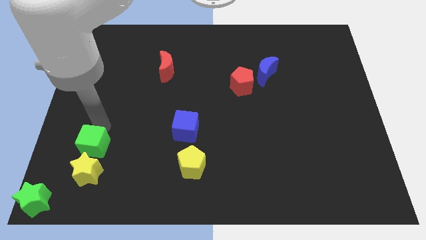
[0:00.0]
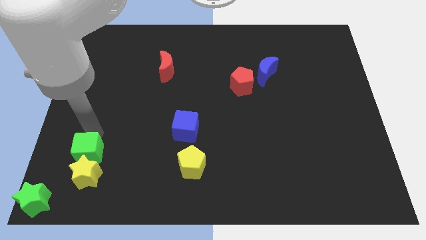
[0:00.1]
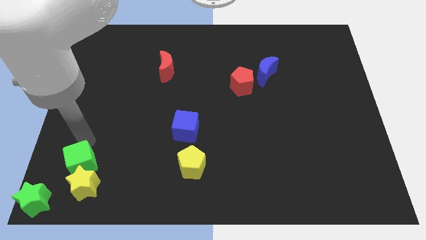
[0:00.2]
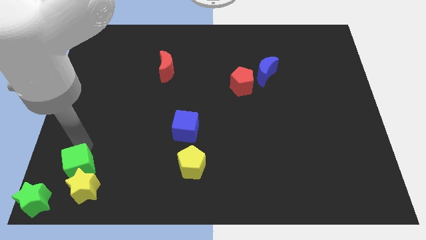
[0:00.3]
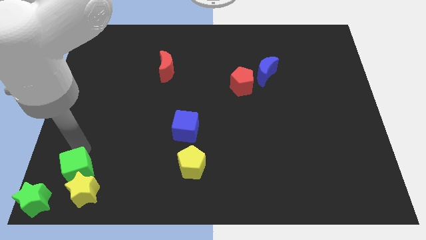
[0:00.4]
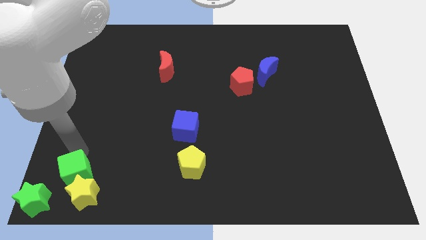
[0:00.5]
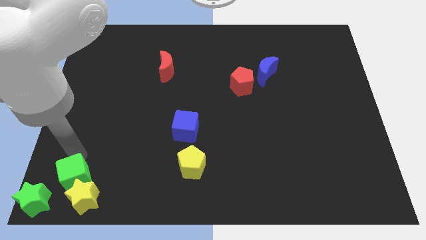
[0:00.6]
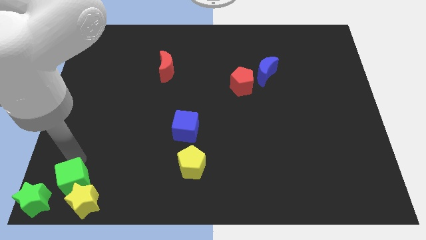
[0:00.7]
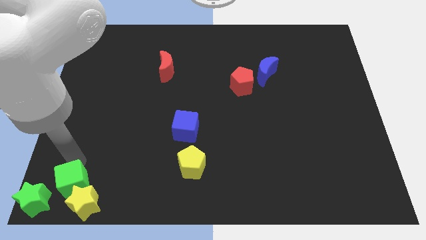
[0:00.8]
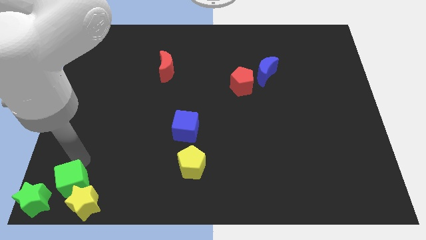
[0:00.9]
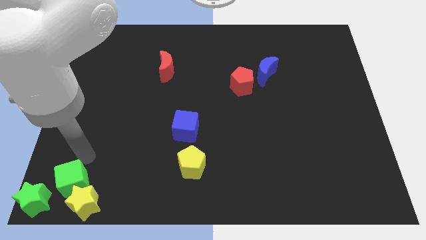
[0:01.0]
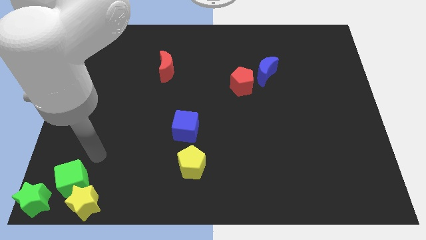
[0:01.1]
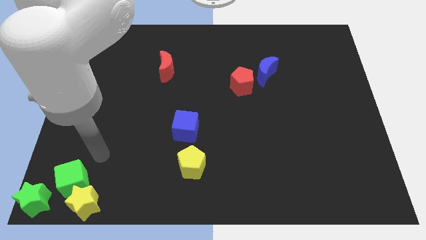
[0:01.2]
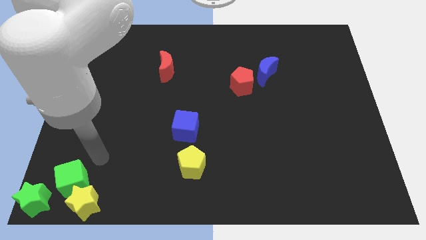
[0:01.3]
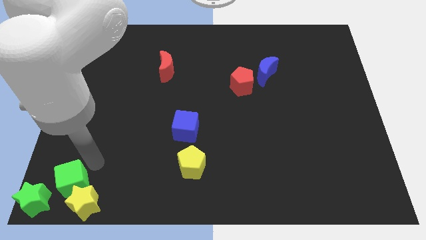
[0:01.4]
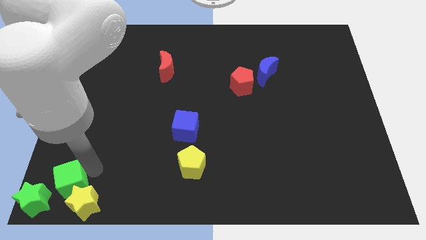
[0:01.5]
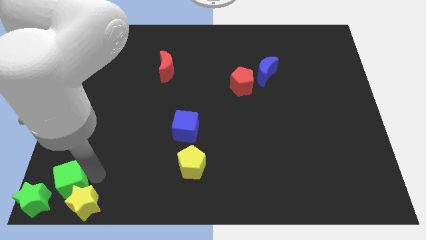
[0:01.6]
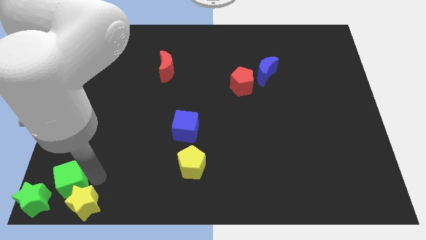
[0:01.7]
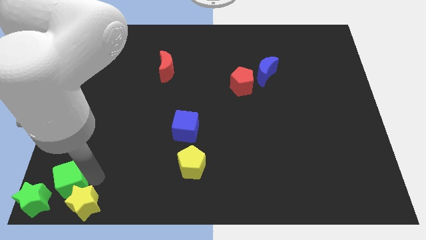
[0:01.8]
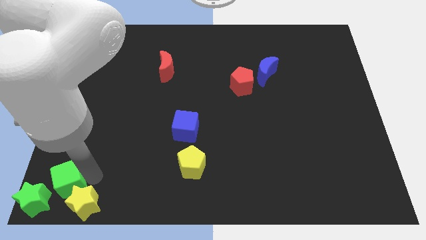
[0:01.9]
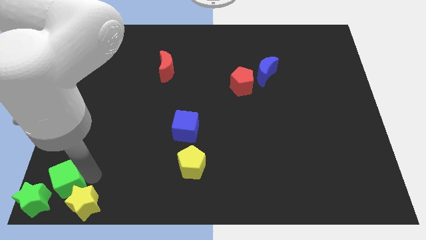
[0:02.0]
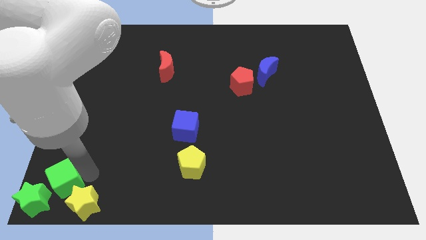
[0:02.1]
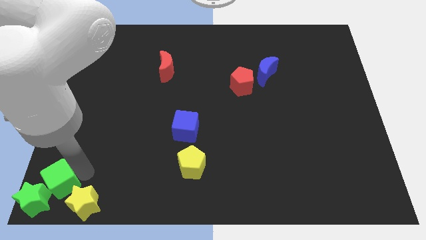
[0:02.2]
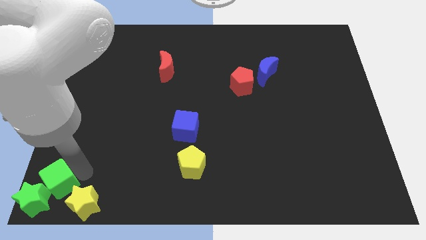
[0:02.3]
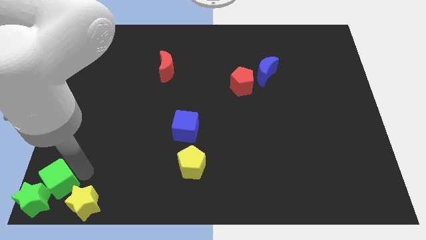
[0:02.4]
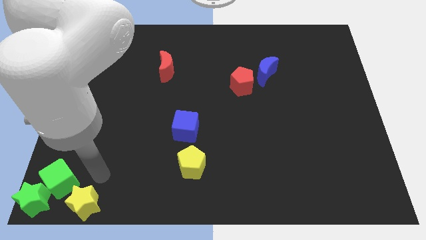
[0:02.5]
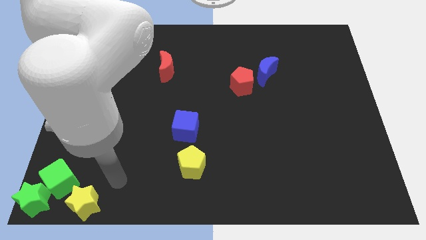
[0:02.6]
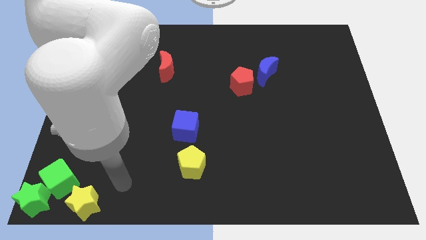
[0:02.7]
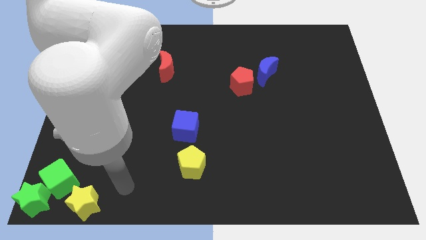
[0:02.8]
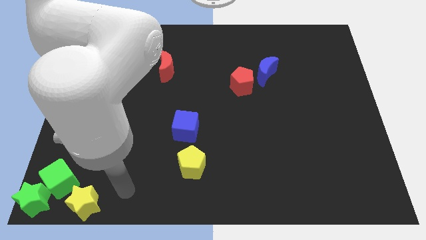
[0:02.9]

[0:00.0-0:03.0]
push the green cube into the green star

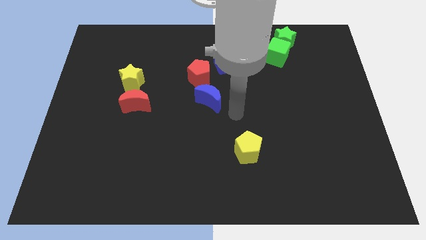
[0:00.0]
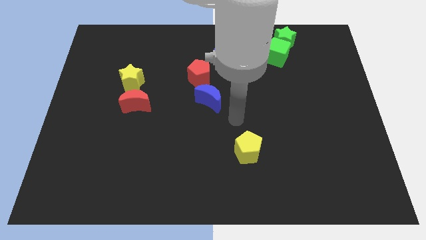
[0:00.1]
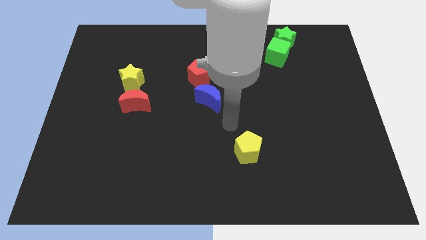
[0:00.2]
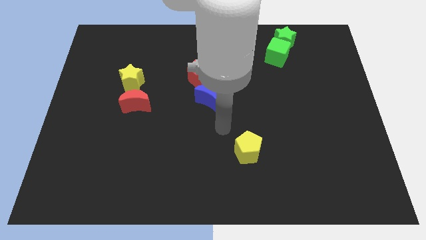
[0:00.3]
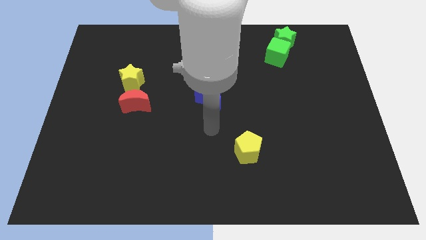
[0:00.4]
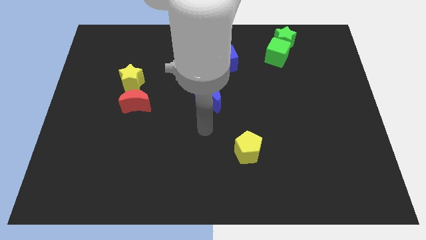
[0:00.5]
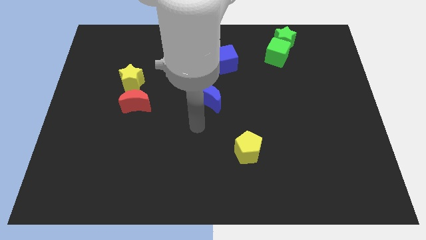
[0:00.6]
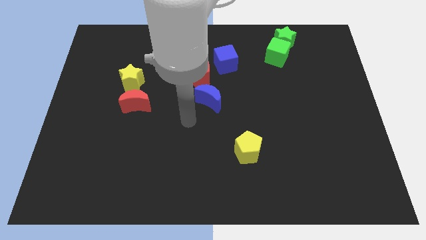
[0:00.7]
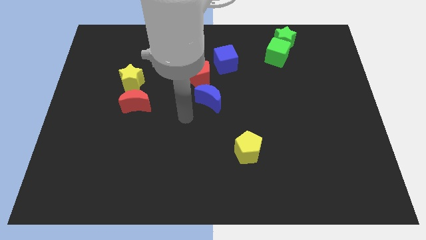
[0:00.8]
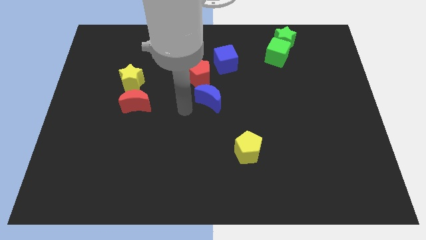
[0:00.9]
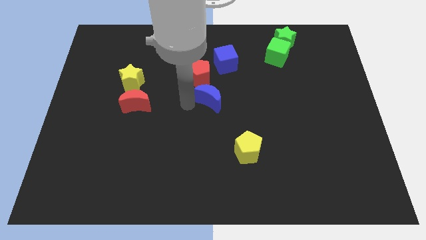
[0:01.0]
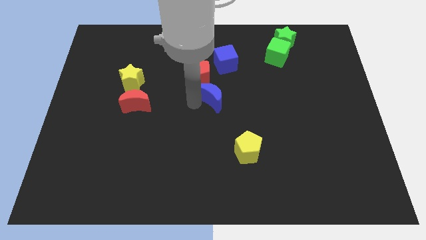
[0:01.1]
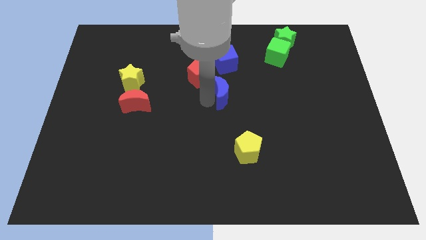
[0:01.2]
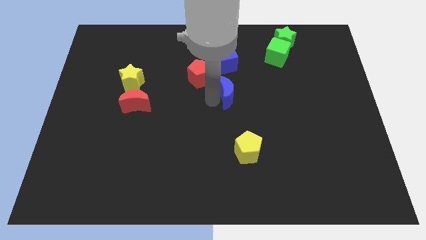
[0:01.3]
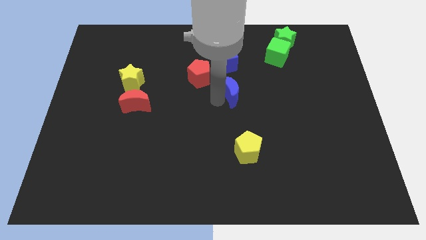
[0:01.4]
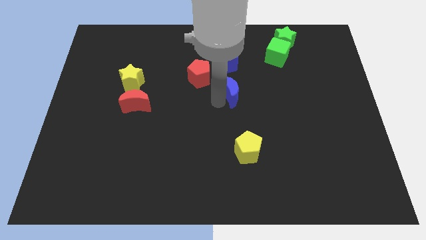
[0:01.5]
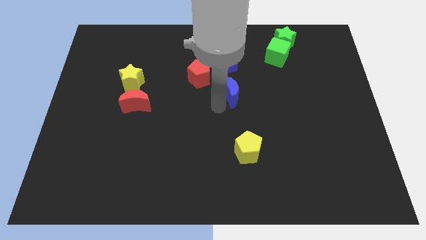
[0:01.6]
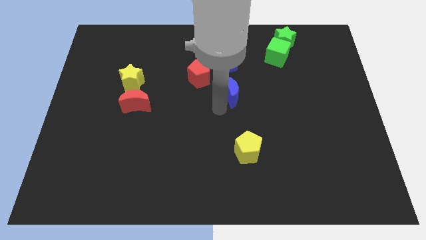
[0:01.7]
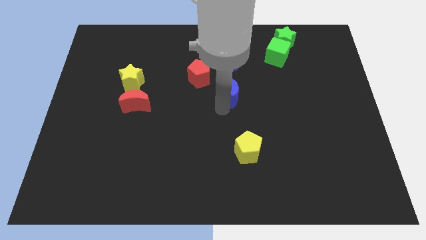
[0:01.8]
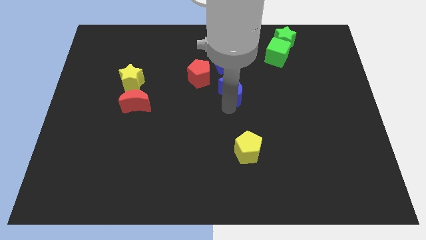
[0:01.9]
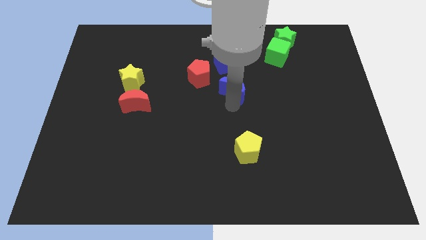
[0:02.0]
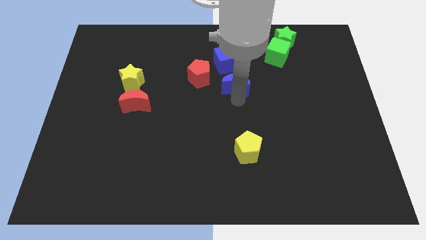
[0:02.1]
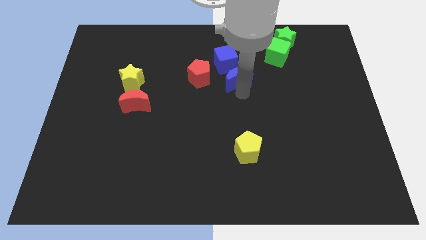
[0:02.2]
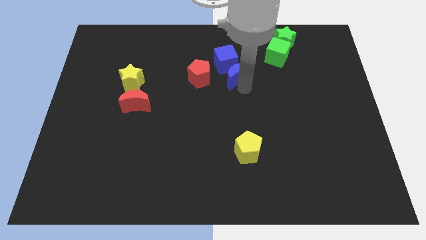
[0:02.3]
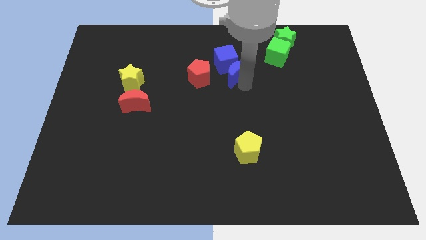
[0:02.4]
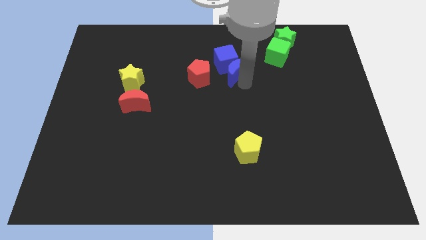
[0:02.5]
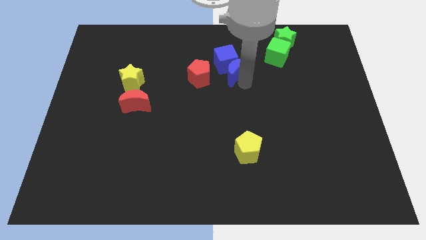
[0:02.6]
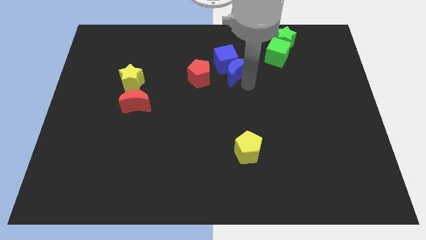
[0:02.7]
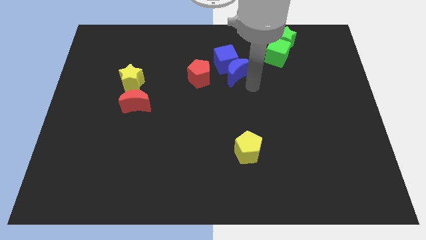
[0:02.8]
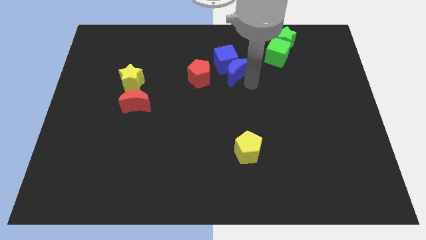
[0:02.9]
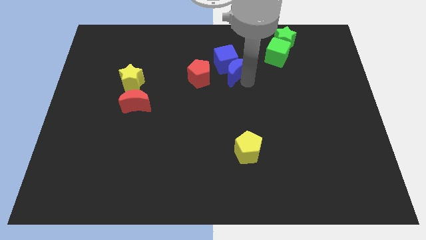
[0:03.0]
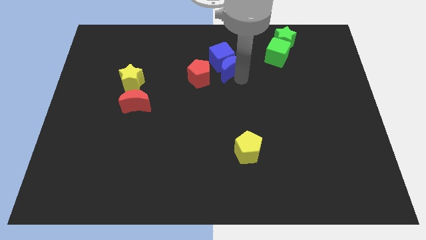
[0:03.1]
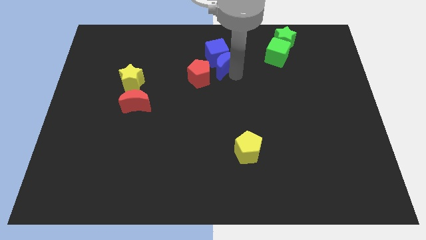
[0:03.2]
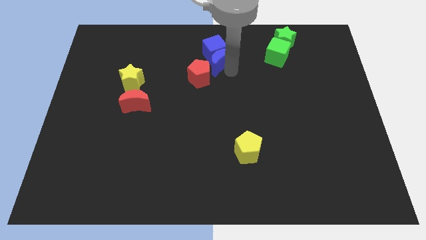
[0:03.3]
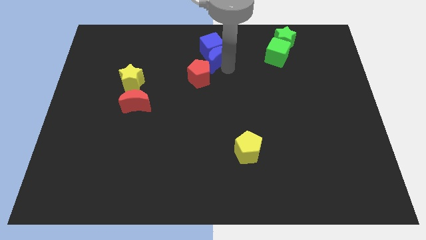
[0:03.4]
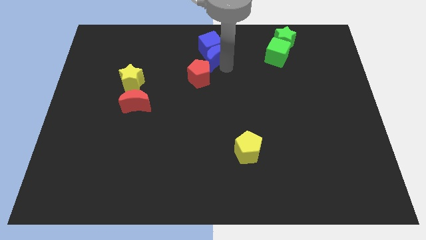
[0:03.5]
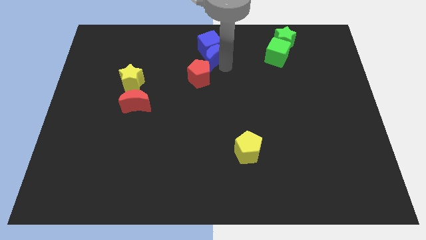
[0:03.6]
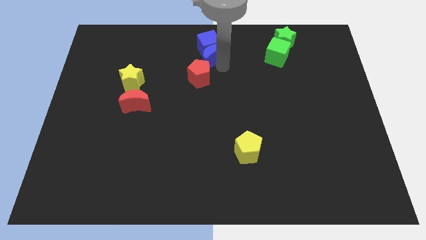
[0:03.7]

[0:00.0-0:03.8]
push the blue crescent into the blue cube

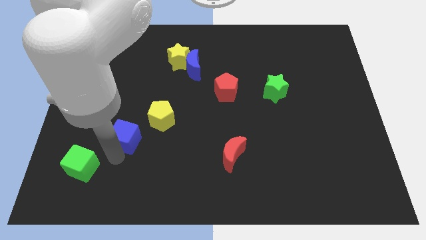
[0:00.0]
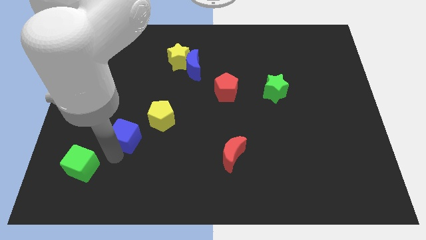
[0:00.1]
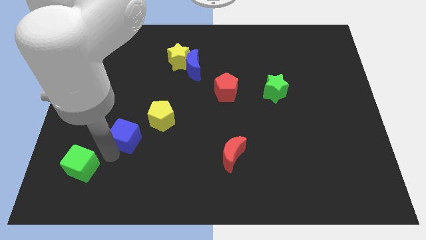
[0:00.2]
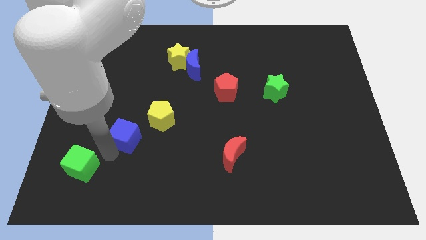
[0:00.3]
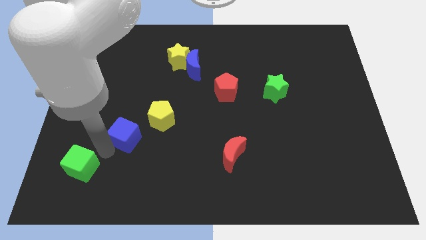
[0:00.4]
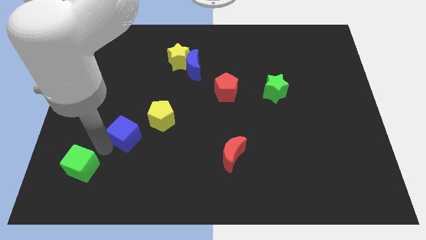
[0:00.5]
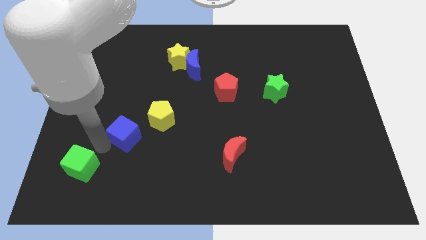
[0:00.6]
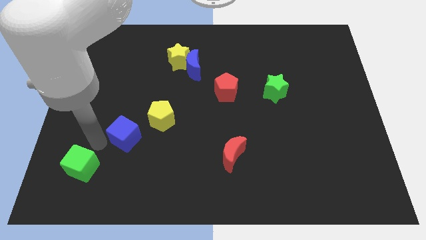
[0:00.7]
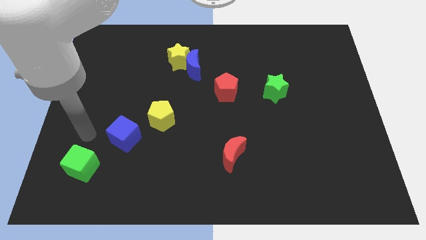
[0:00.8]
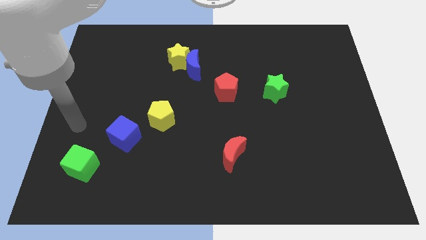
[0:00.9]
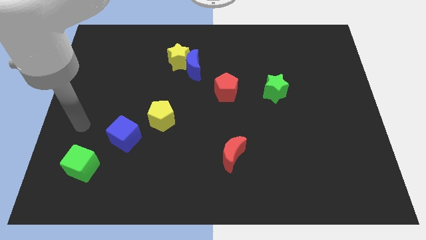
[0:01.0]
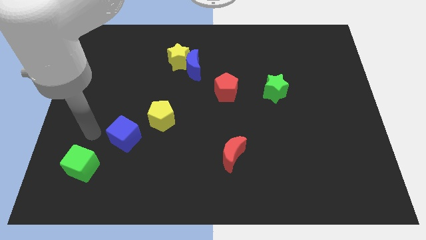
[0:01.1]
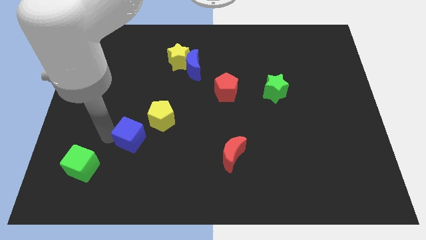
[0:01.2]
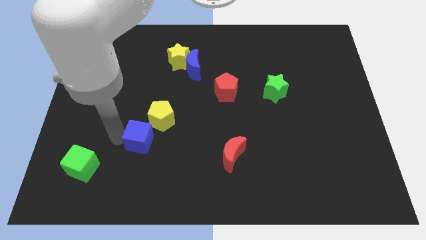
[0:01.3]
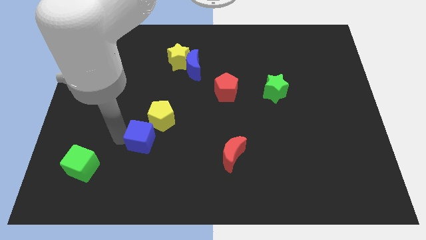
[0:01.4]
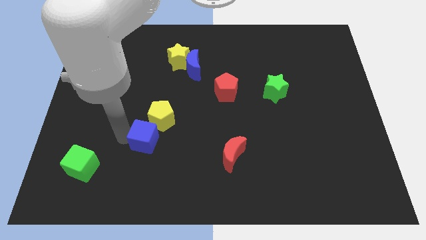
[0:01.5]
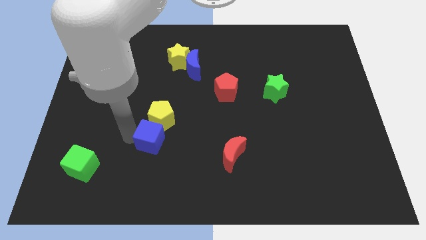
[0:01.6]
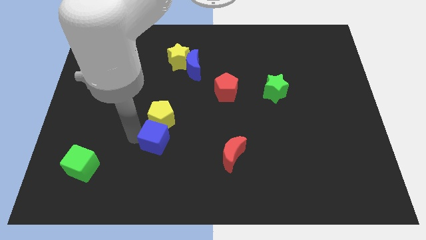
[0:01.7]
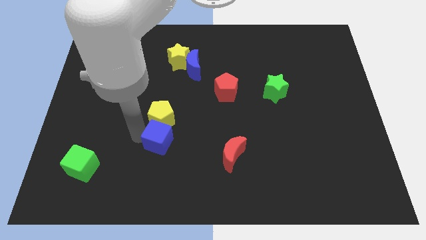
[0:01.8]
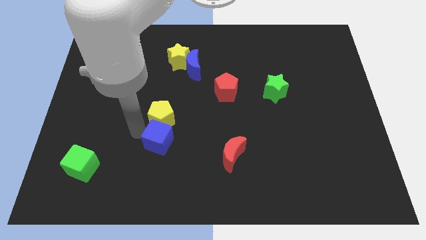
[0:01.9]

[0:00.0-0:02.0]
place the blue cube to the bottom of the yellow pentagon
